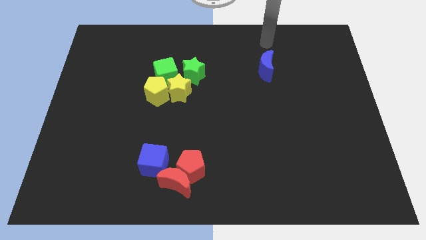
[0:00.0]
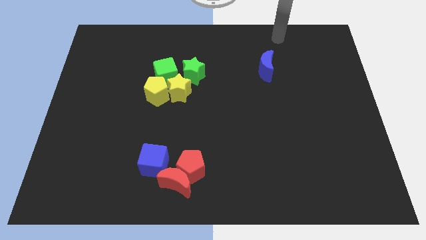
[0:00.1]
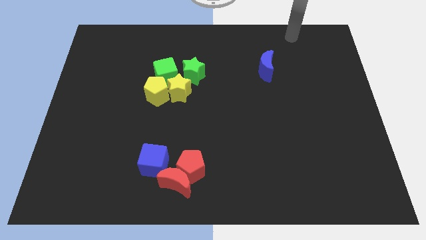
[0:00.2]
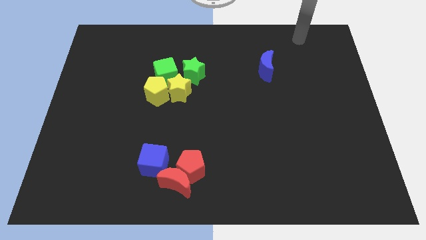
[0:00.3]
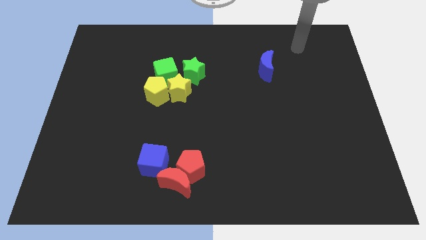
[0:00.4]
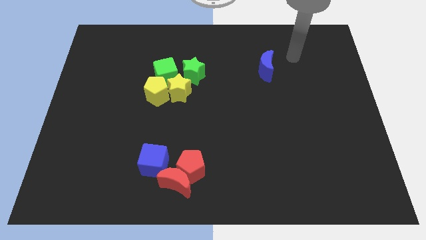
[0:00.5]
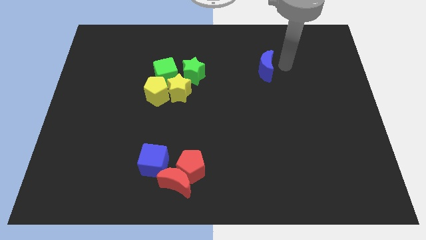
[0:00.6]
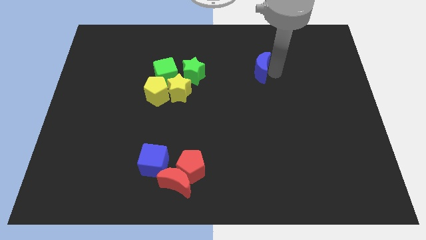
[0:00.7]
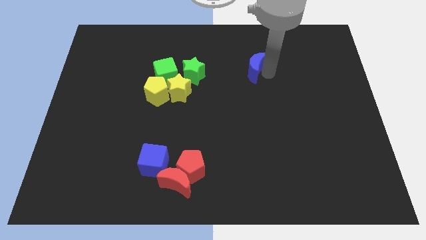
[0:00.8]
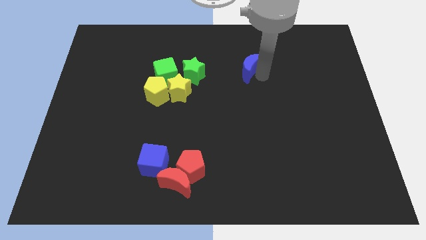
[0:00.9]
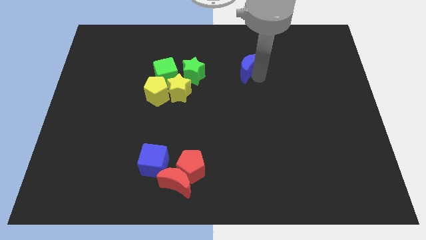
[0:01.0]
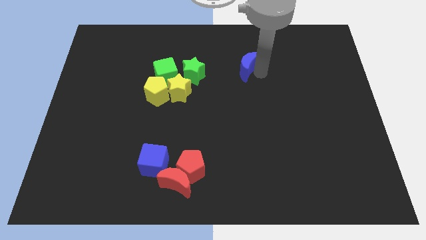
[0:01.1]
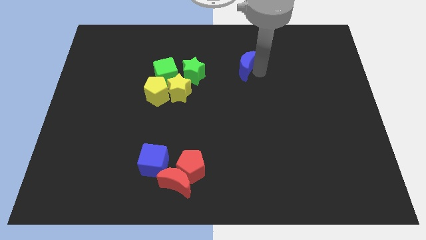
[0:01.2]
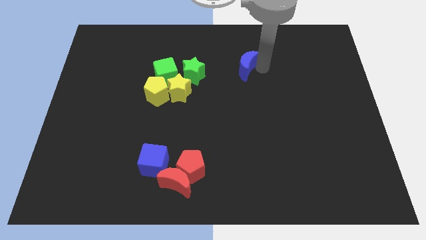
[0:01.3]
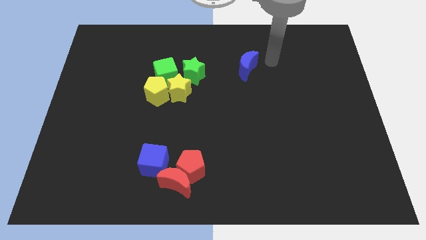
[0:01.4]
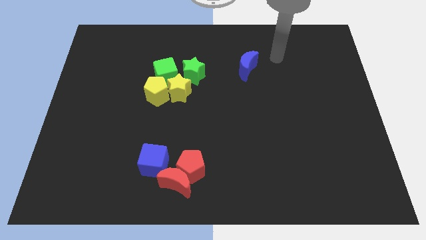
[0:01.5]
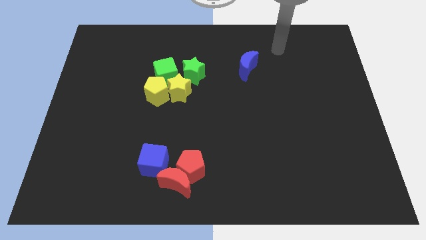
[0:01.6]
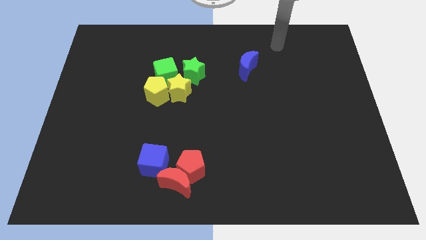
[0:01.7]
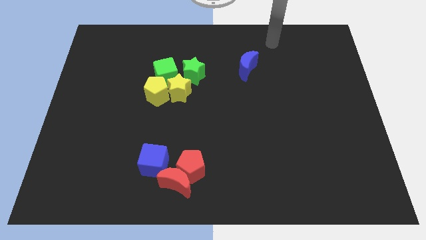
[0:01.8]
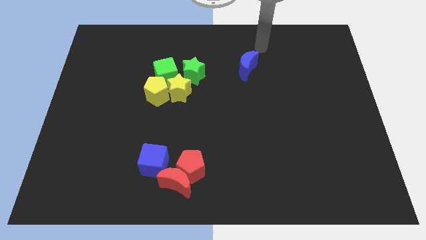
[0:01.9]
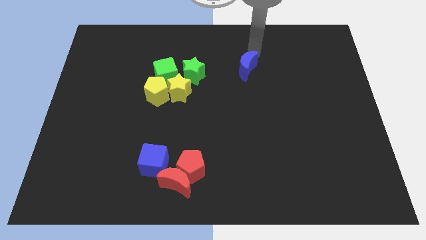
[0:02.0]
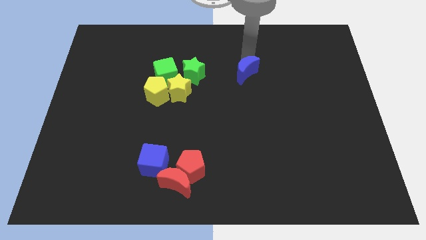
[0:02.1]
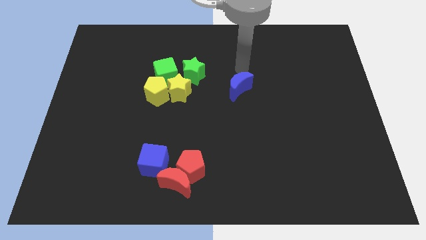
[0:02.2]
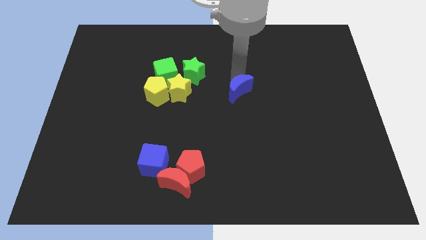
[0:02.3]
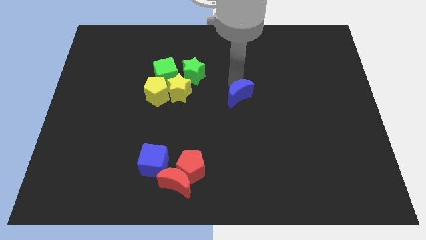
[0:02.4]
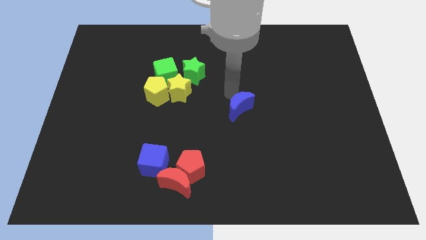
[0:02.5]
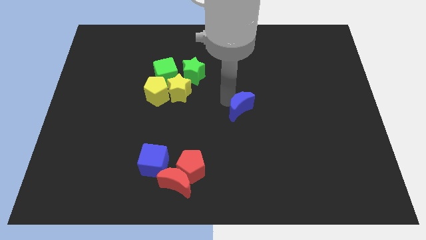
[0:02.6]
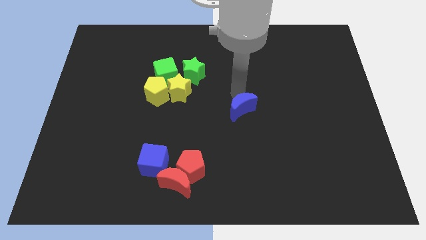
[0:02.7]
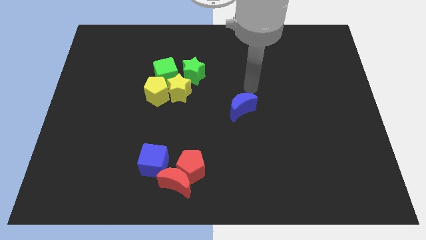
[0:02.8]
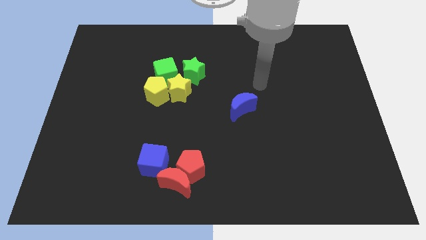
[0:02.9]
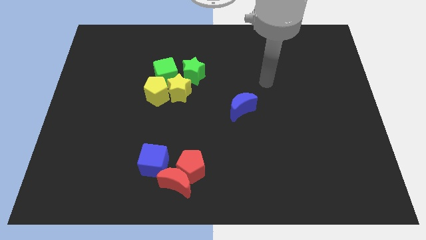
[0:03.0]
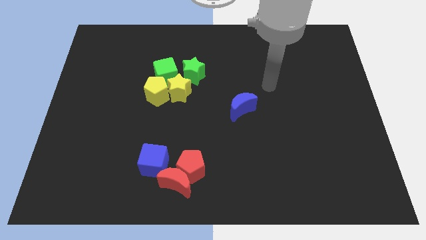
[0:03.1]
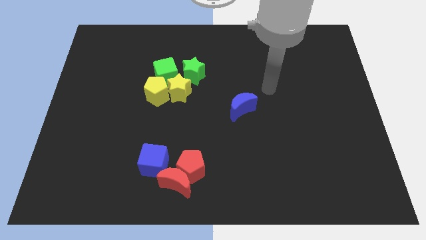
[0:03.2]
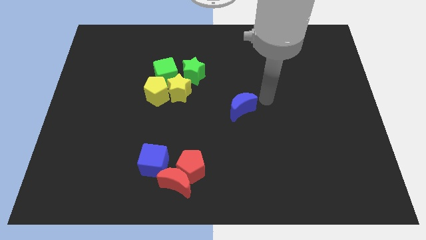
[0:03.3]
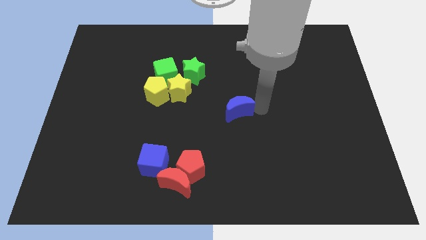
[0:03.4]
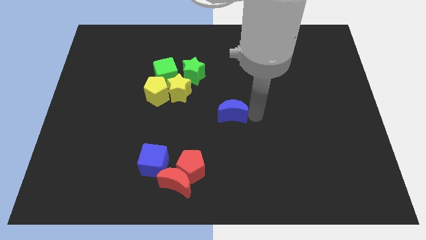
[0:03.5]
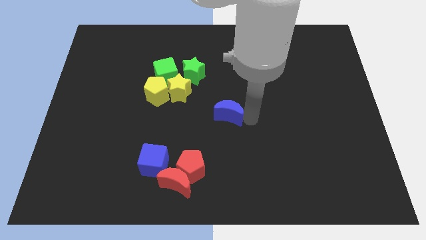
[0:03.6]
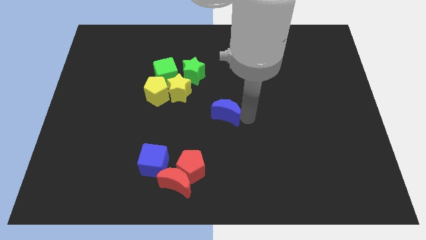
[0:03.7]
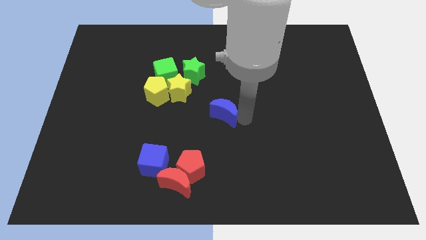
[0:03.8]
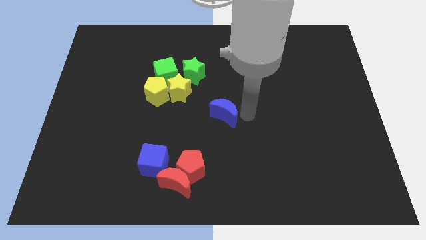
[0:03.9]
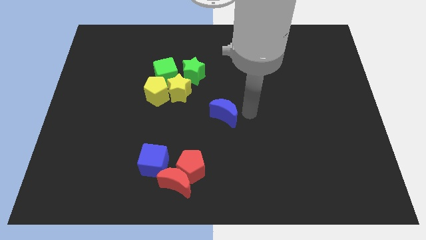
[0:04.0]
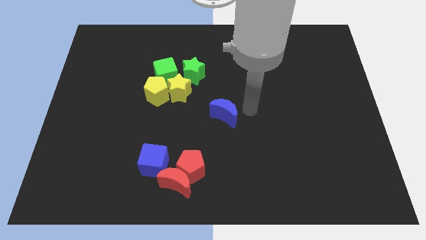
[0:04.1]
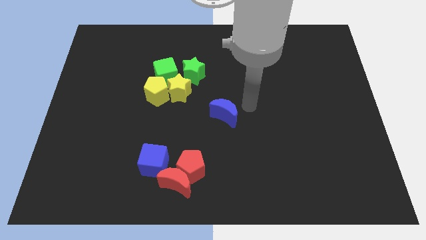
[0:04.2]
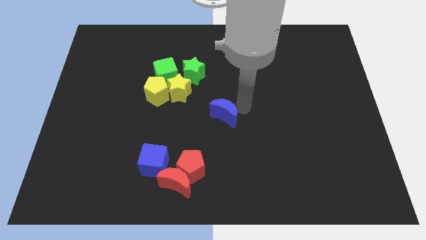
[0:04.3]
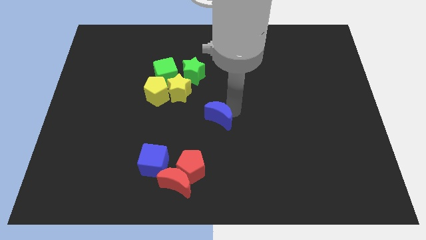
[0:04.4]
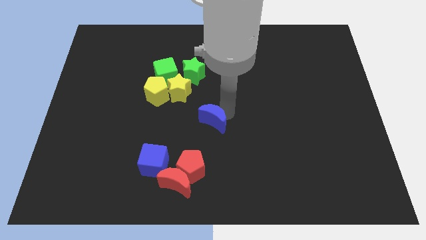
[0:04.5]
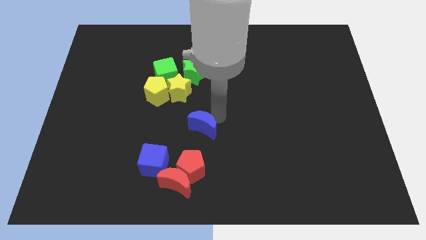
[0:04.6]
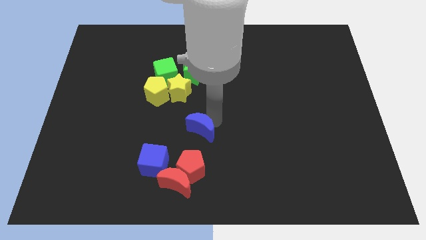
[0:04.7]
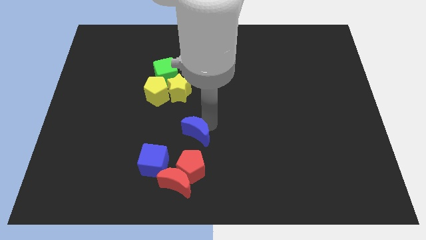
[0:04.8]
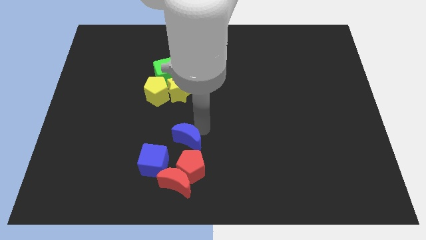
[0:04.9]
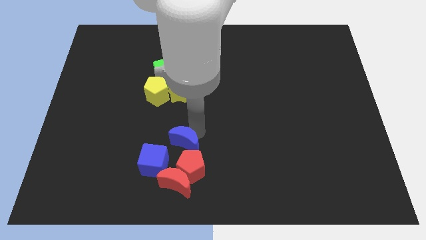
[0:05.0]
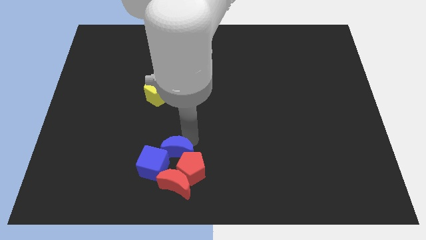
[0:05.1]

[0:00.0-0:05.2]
move the blue moon to the blue cube

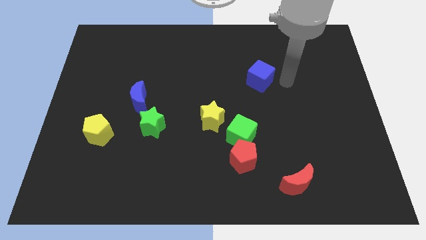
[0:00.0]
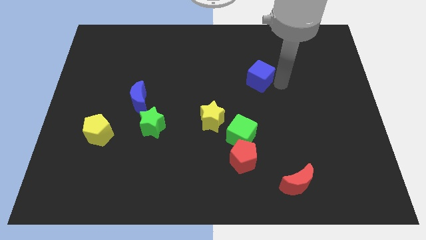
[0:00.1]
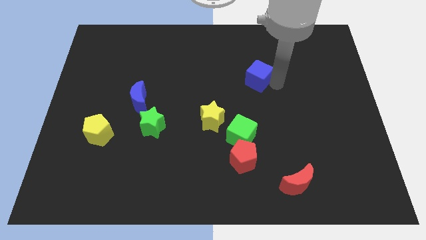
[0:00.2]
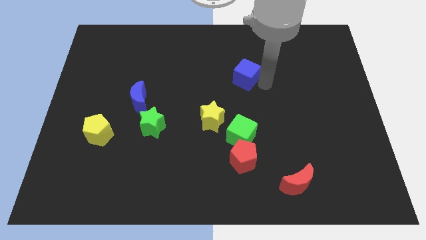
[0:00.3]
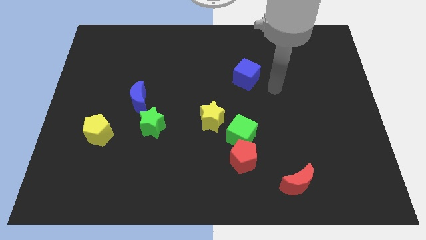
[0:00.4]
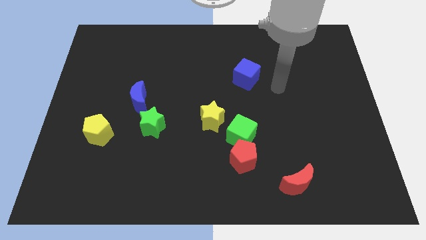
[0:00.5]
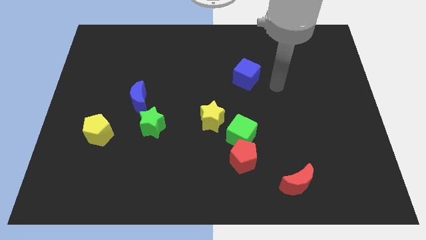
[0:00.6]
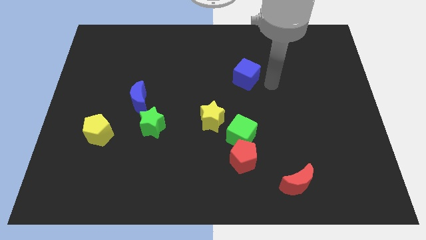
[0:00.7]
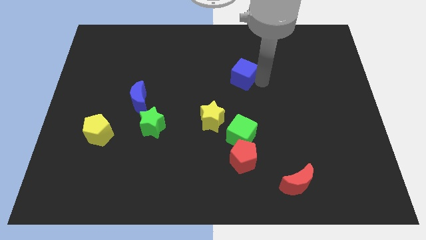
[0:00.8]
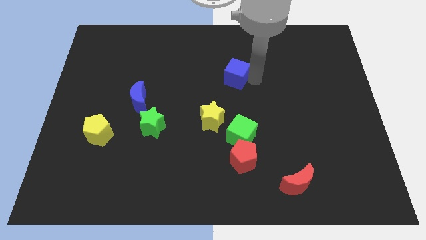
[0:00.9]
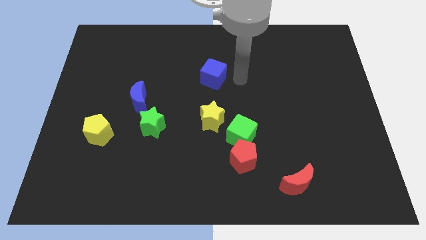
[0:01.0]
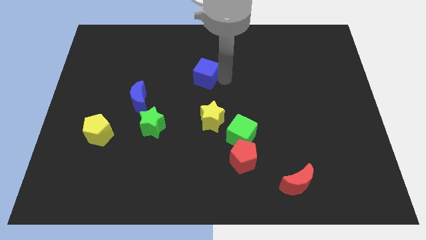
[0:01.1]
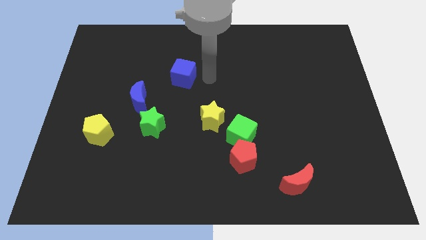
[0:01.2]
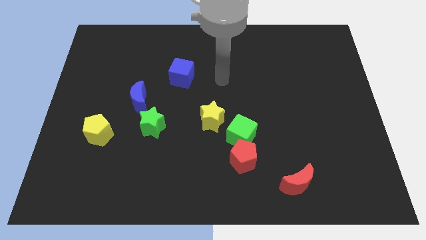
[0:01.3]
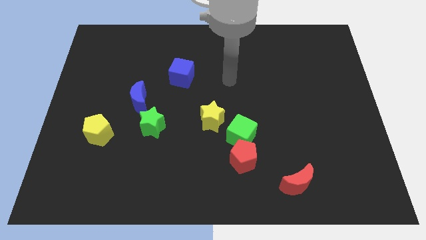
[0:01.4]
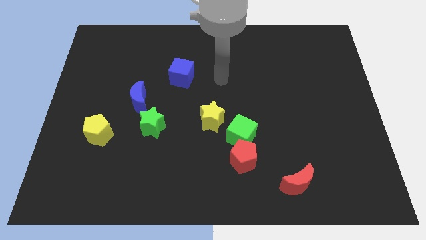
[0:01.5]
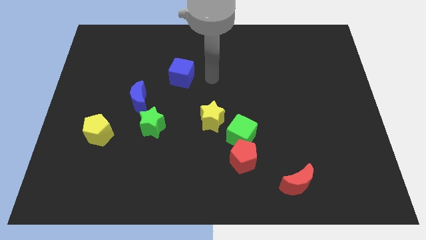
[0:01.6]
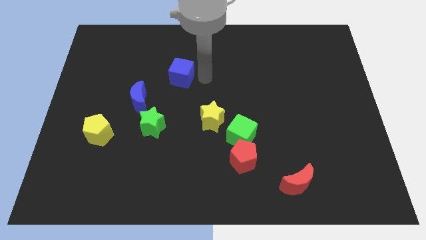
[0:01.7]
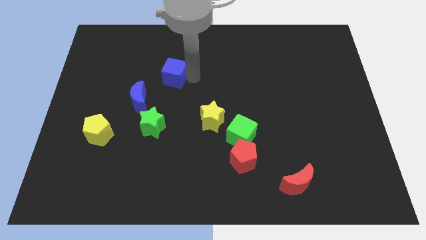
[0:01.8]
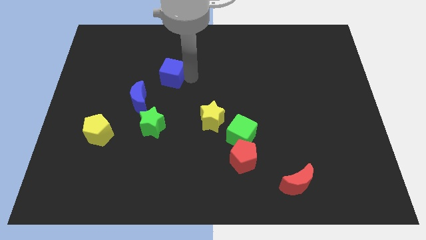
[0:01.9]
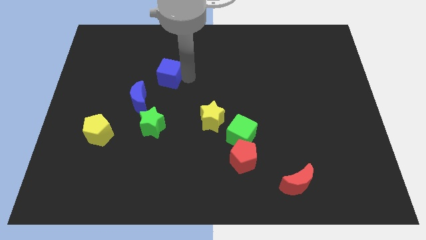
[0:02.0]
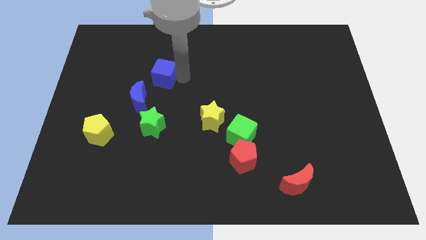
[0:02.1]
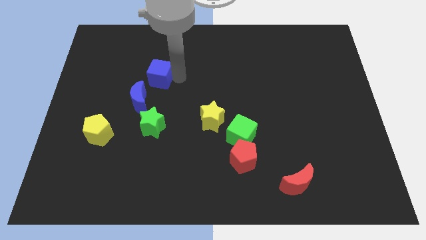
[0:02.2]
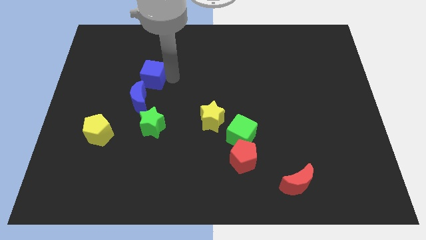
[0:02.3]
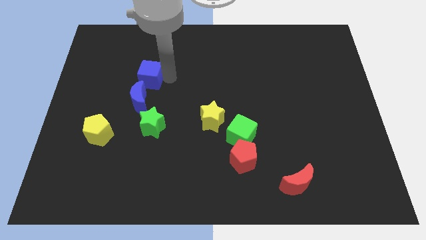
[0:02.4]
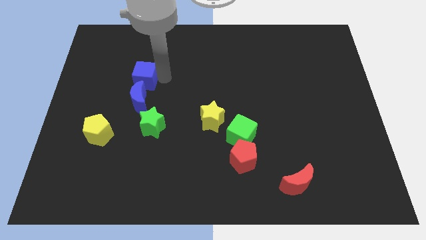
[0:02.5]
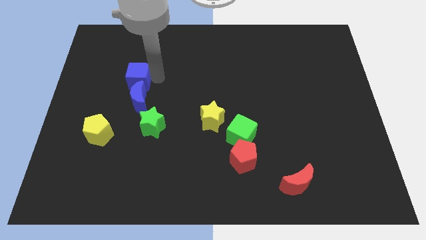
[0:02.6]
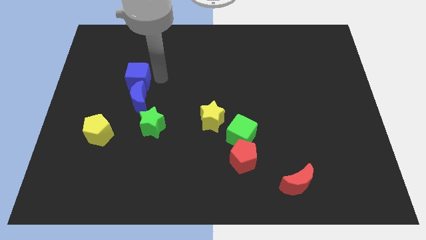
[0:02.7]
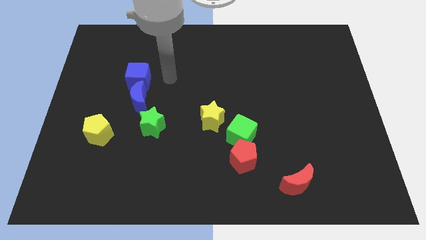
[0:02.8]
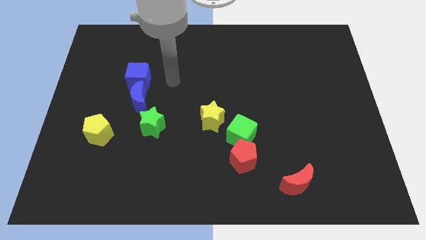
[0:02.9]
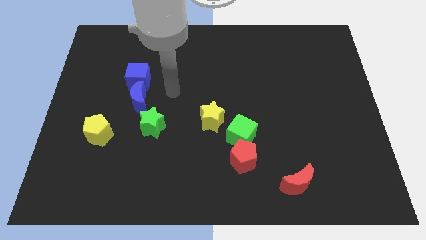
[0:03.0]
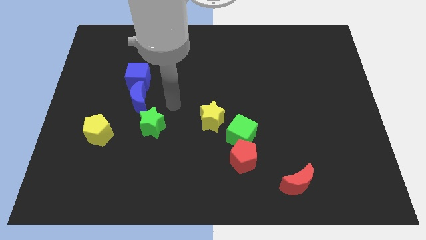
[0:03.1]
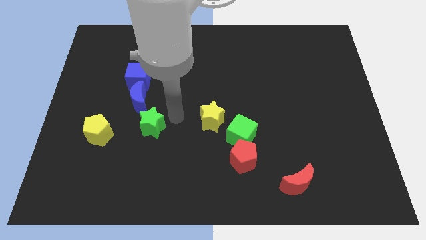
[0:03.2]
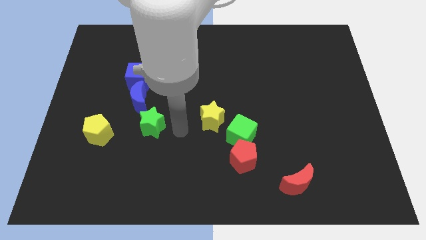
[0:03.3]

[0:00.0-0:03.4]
place the blue cube on top of blue crescent

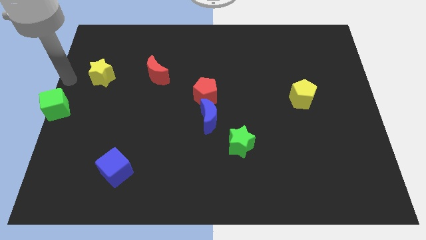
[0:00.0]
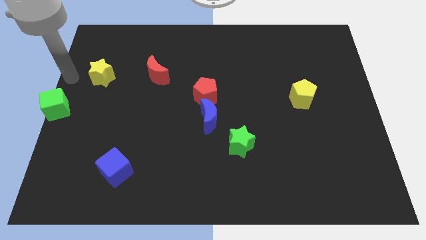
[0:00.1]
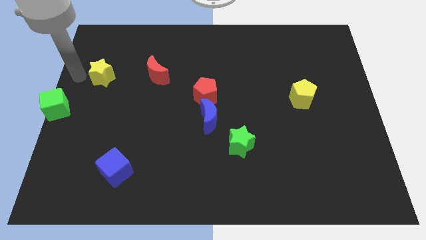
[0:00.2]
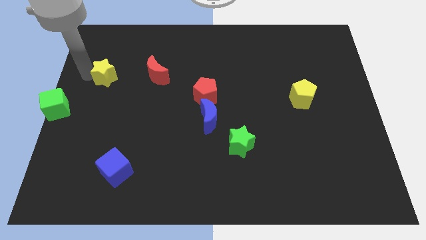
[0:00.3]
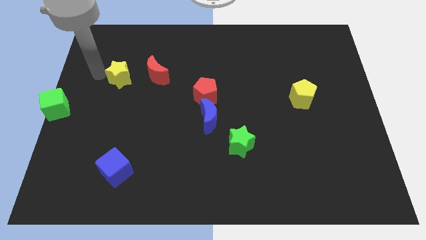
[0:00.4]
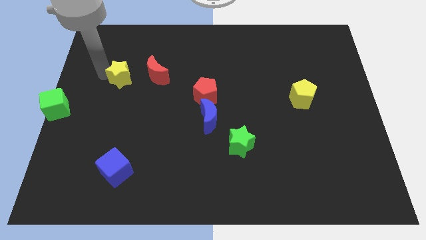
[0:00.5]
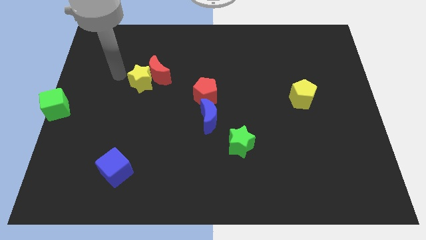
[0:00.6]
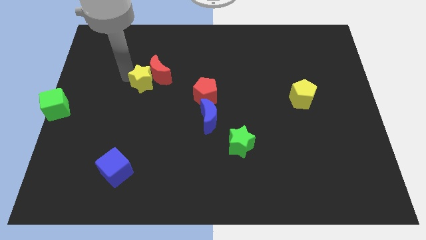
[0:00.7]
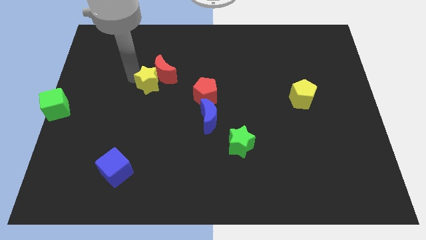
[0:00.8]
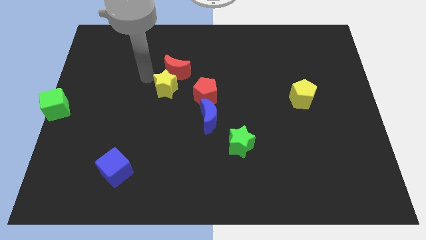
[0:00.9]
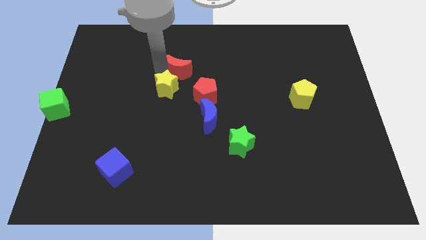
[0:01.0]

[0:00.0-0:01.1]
move the yellow star to the bottom of the red crescent
